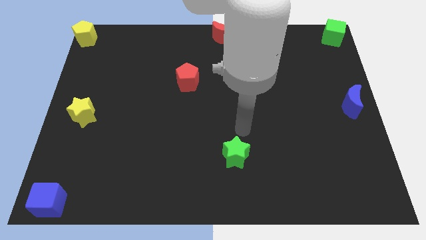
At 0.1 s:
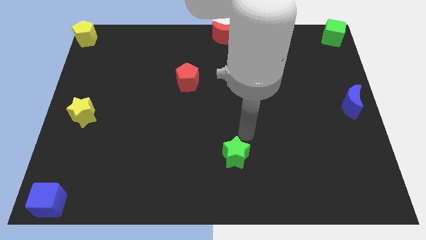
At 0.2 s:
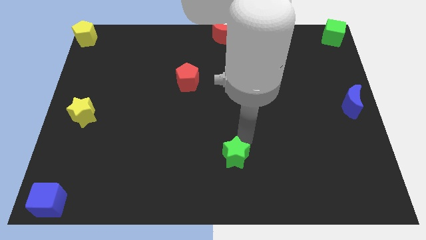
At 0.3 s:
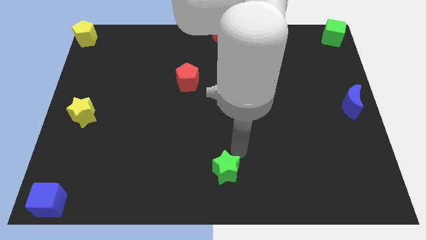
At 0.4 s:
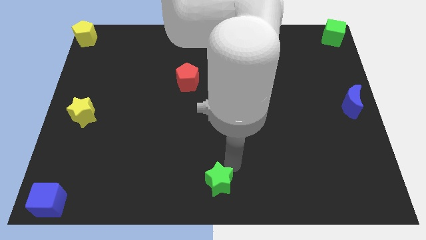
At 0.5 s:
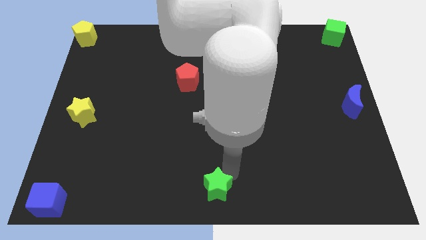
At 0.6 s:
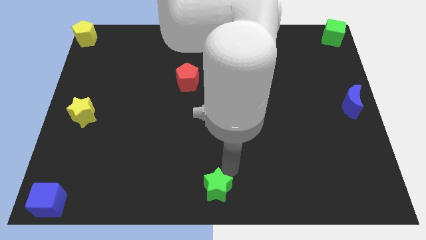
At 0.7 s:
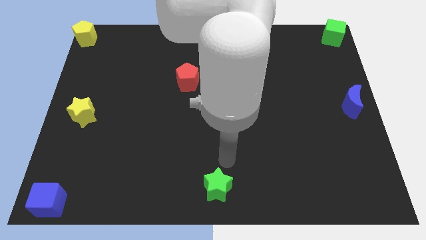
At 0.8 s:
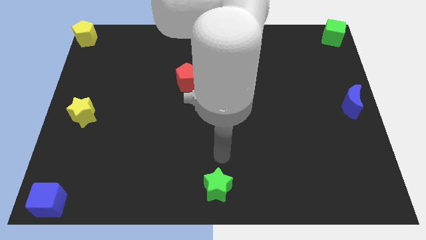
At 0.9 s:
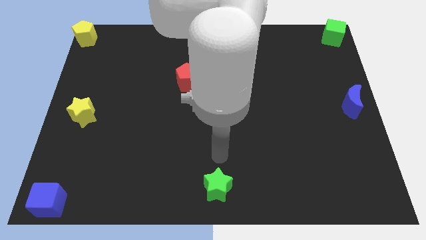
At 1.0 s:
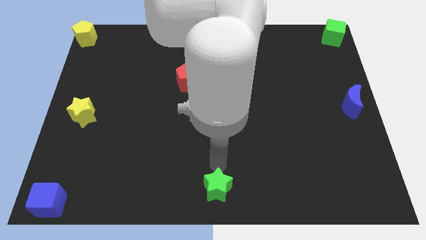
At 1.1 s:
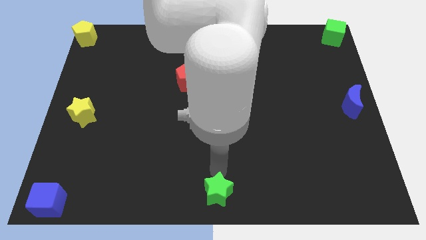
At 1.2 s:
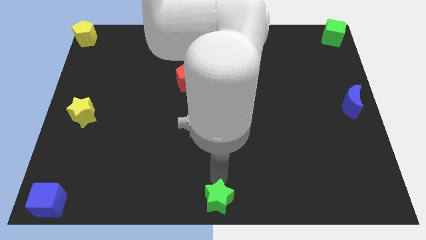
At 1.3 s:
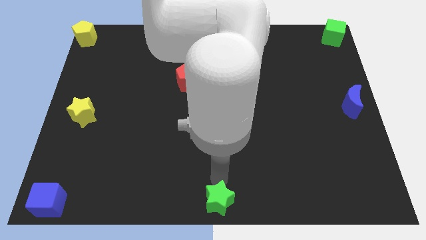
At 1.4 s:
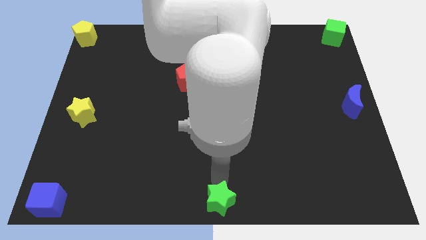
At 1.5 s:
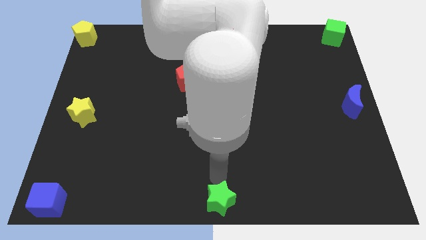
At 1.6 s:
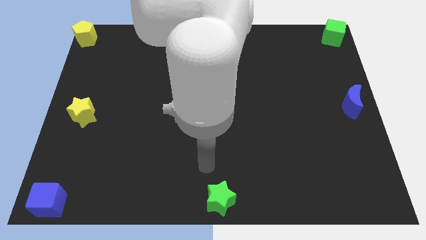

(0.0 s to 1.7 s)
move the green star to the bottom center of the board

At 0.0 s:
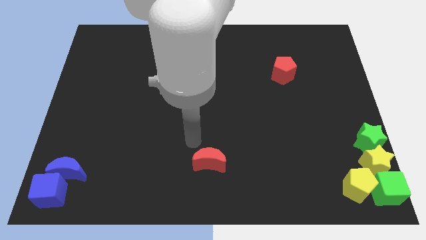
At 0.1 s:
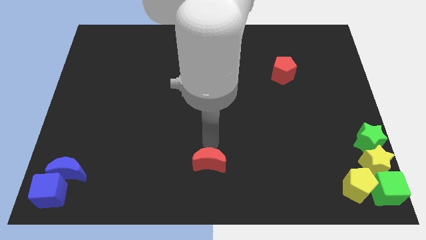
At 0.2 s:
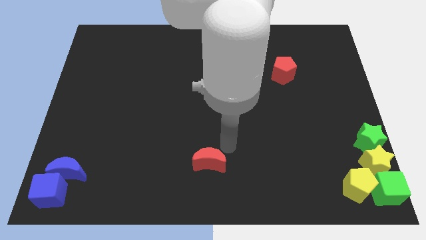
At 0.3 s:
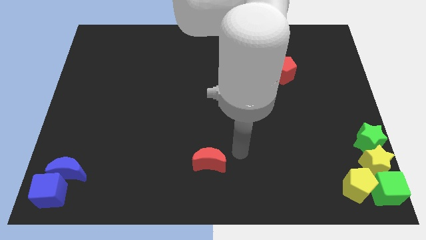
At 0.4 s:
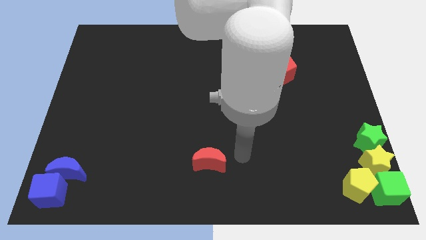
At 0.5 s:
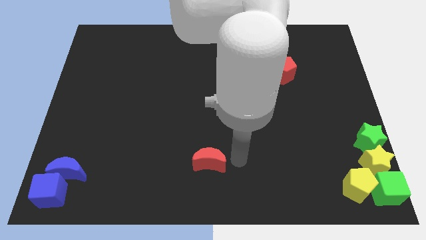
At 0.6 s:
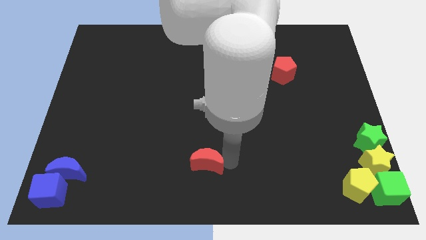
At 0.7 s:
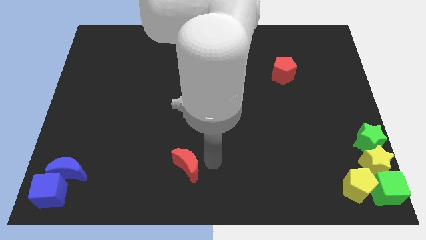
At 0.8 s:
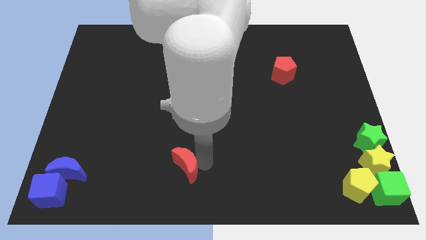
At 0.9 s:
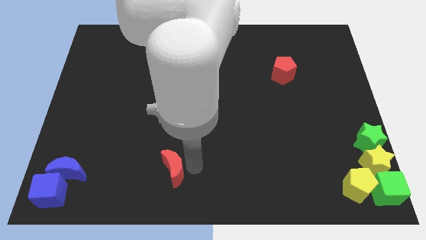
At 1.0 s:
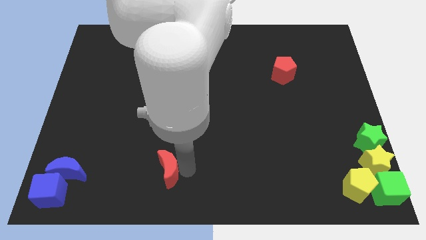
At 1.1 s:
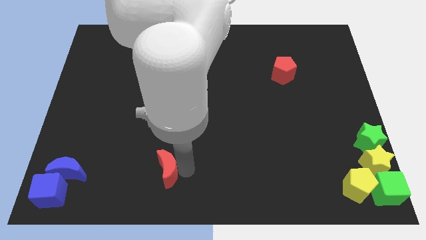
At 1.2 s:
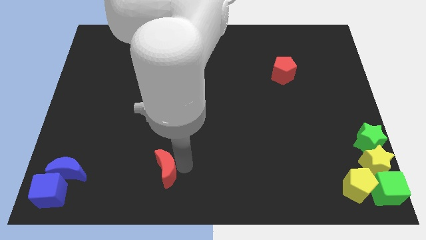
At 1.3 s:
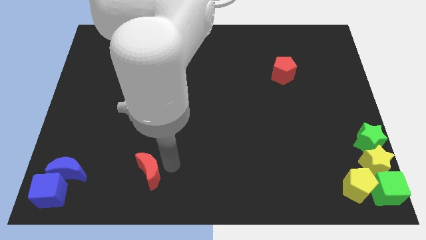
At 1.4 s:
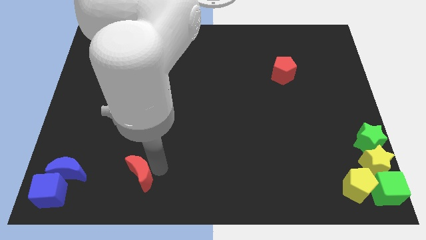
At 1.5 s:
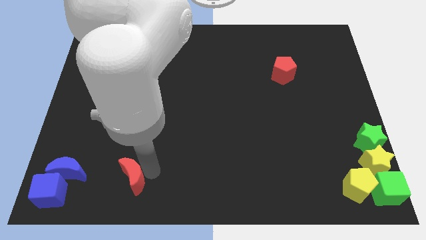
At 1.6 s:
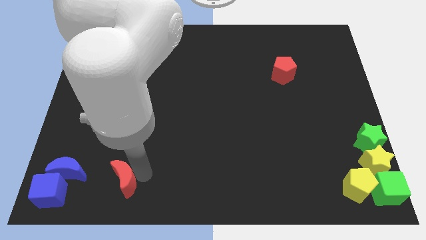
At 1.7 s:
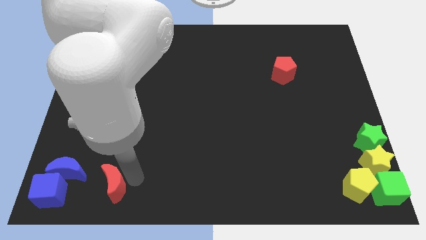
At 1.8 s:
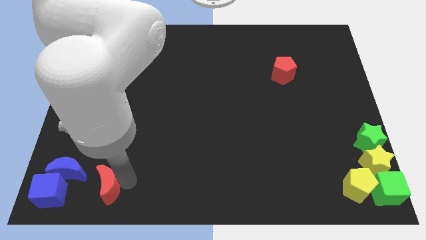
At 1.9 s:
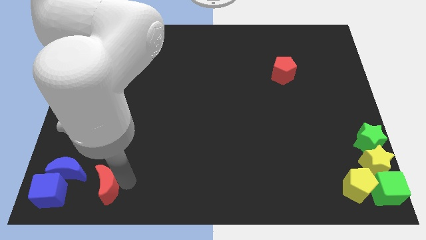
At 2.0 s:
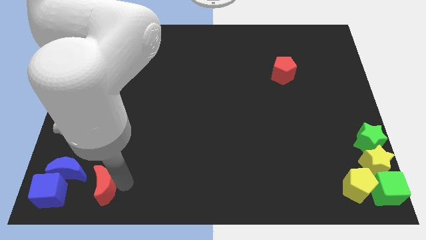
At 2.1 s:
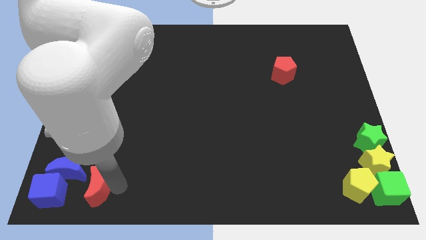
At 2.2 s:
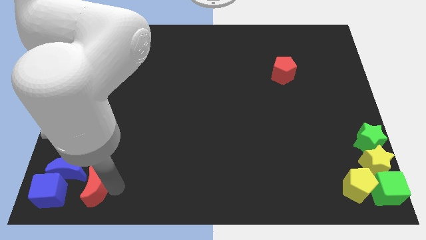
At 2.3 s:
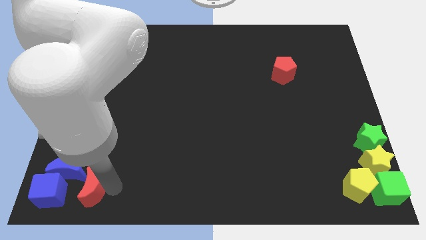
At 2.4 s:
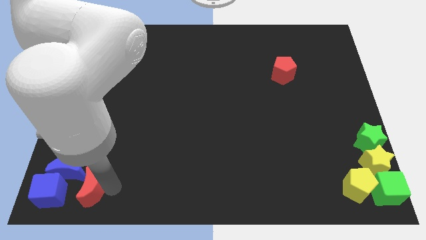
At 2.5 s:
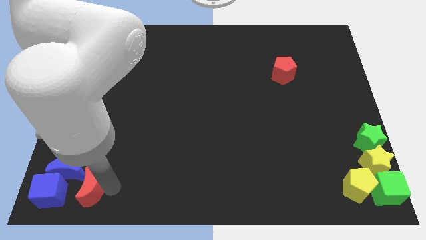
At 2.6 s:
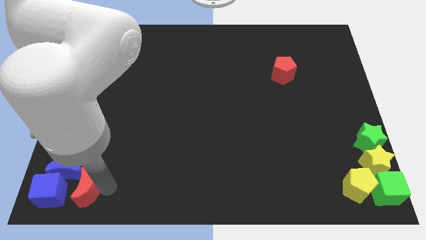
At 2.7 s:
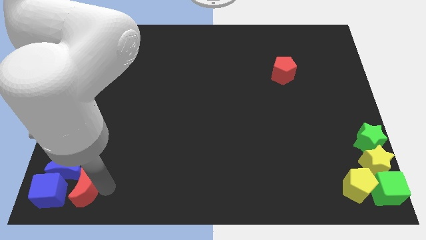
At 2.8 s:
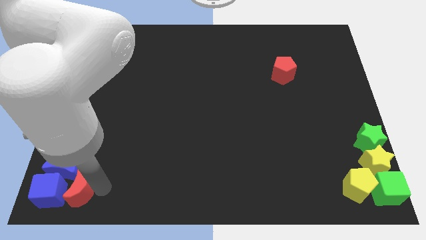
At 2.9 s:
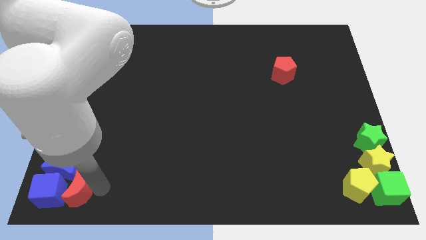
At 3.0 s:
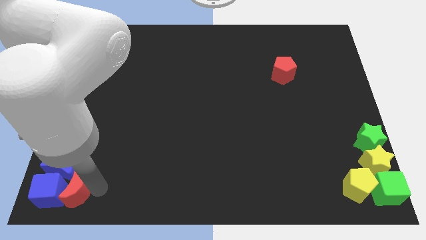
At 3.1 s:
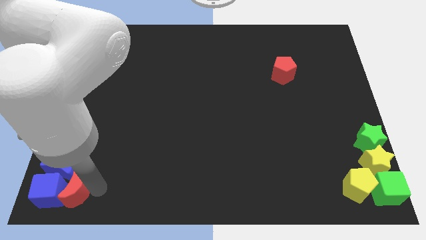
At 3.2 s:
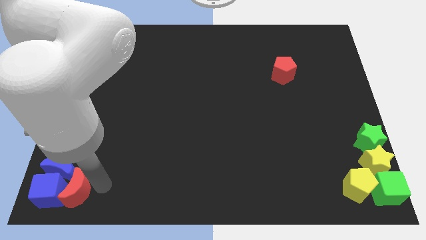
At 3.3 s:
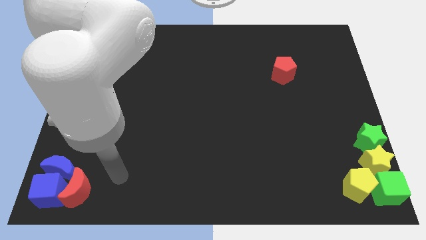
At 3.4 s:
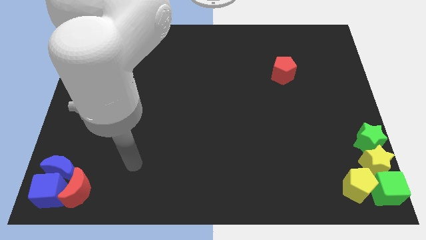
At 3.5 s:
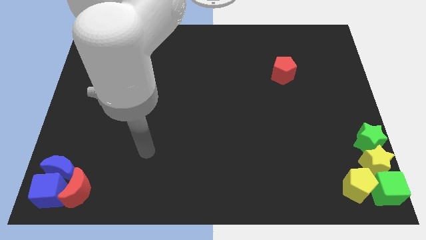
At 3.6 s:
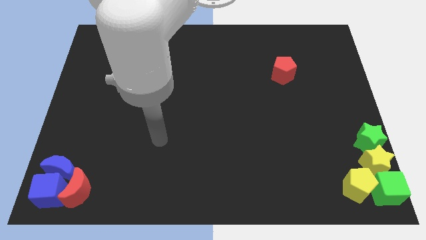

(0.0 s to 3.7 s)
push the red crescent into the blue blocks

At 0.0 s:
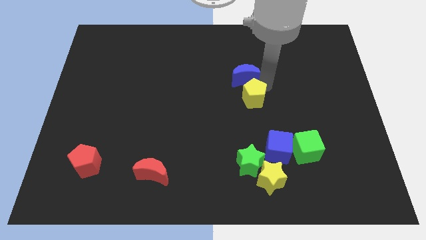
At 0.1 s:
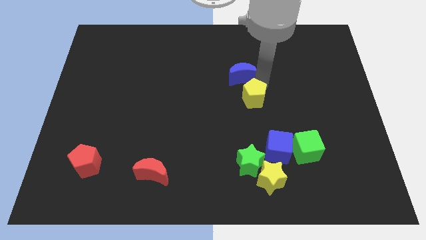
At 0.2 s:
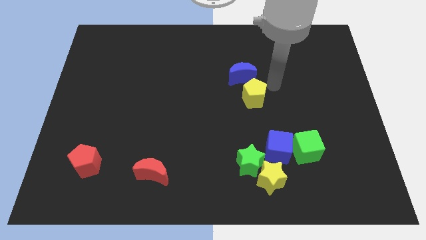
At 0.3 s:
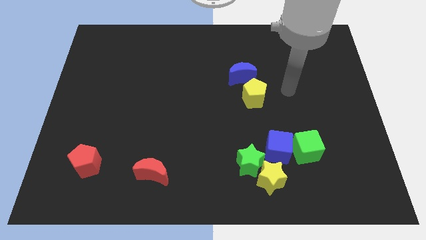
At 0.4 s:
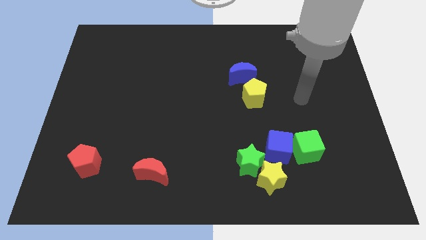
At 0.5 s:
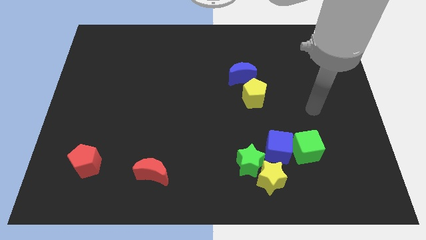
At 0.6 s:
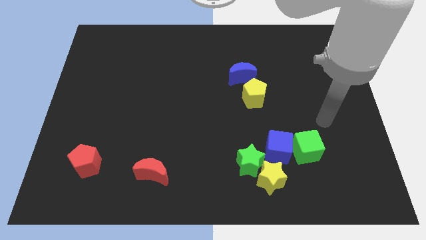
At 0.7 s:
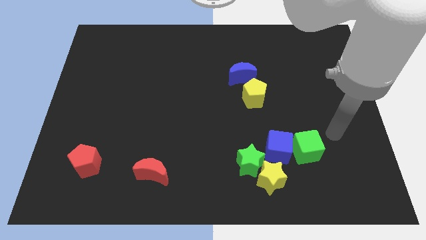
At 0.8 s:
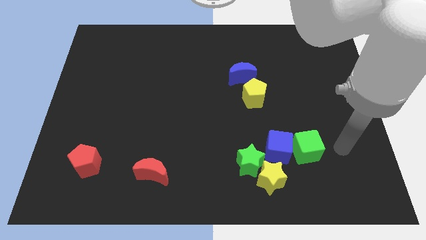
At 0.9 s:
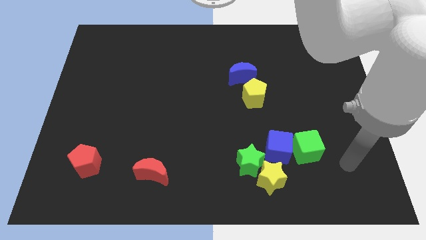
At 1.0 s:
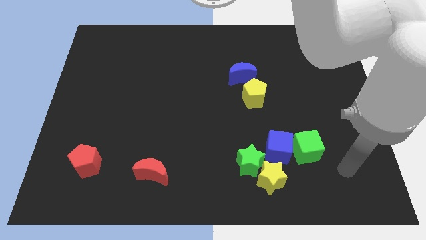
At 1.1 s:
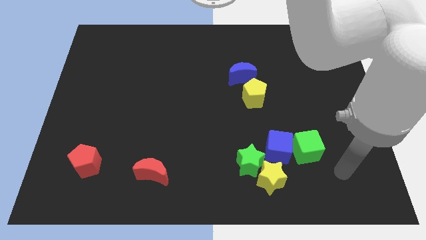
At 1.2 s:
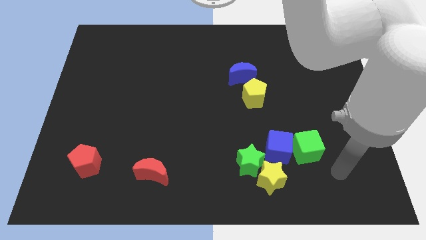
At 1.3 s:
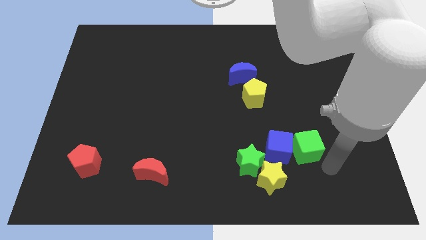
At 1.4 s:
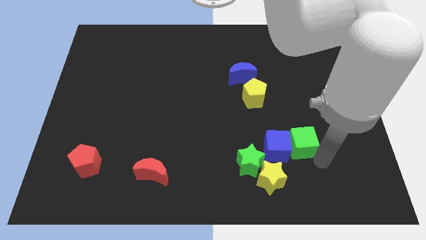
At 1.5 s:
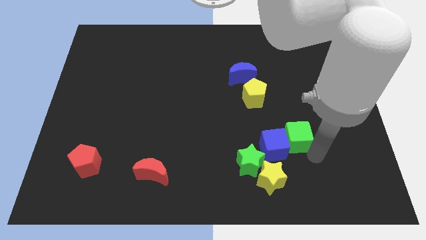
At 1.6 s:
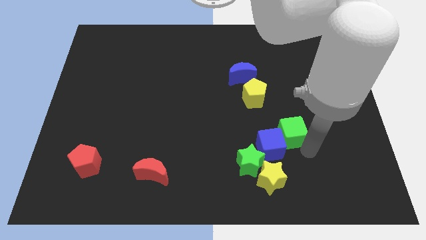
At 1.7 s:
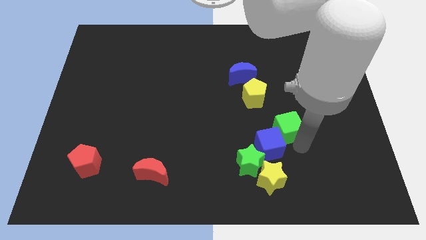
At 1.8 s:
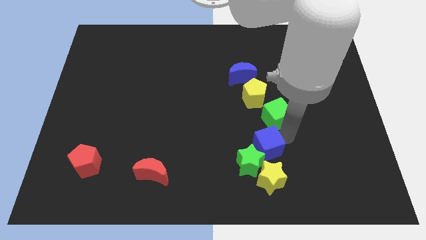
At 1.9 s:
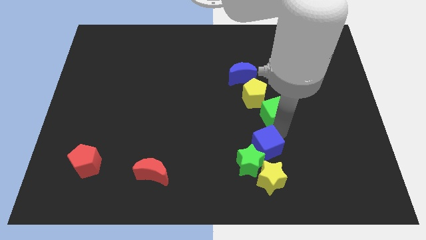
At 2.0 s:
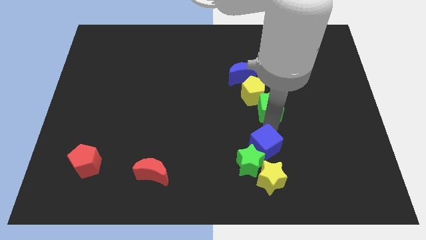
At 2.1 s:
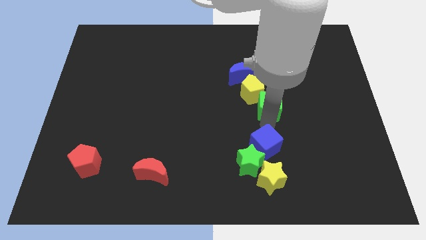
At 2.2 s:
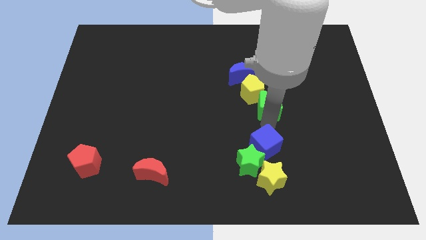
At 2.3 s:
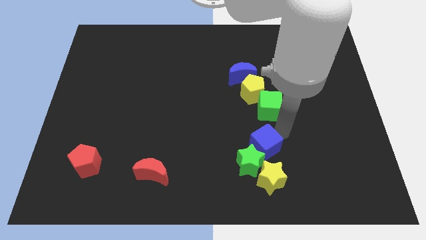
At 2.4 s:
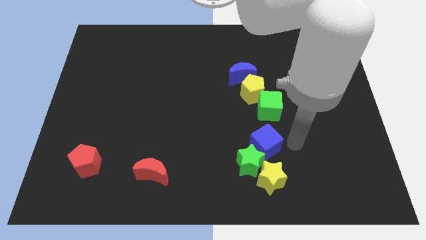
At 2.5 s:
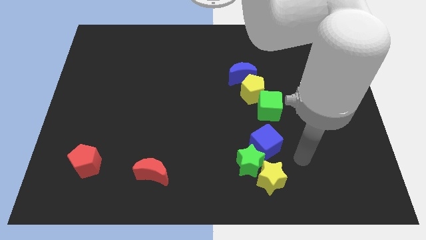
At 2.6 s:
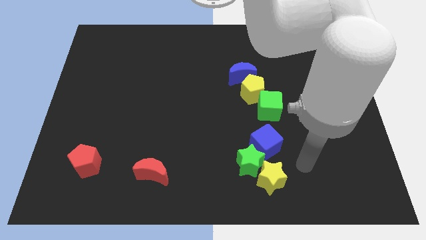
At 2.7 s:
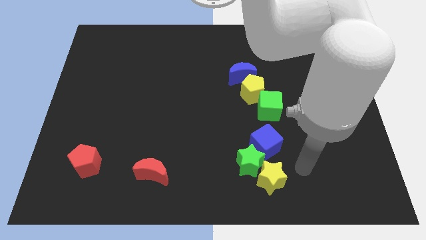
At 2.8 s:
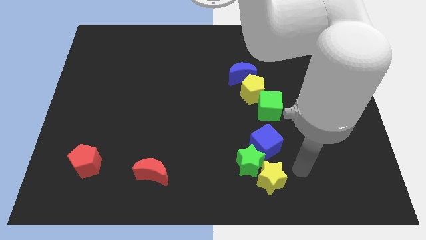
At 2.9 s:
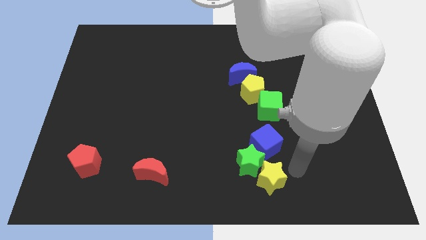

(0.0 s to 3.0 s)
make a diagonal line with the green cube yellow pentagon and blue crescent

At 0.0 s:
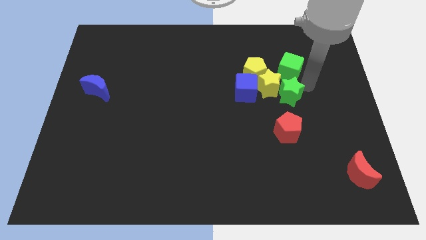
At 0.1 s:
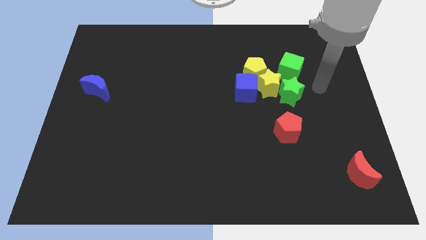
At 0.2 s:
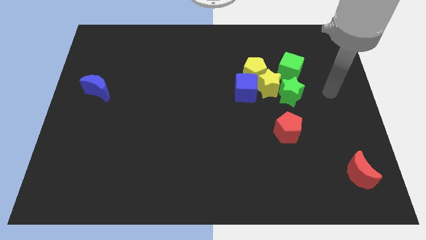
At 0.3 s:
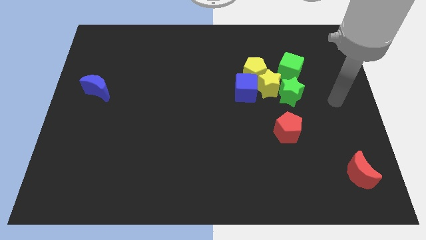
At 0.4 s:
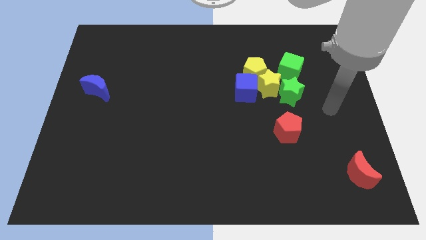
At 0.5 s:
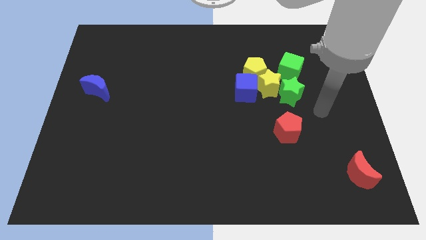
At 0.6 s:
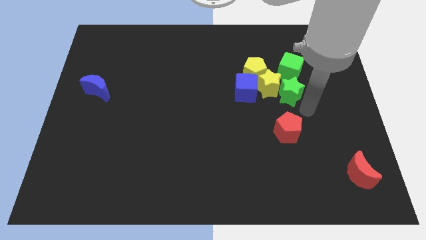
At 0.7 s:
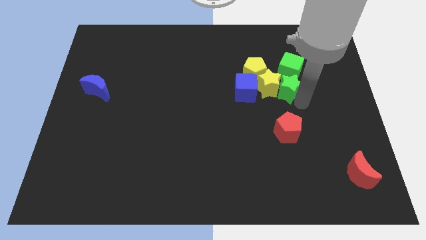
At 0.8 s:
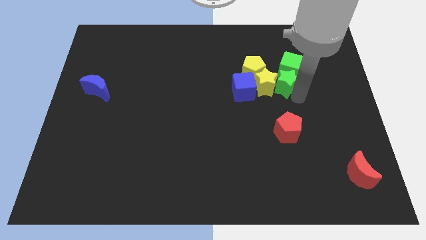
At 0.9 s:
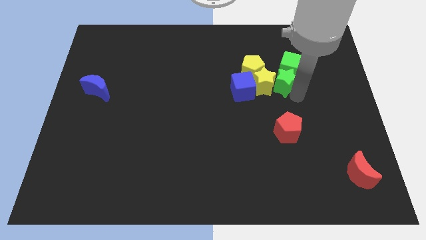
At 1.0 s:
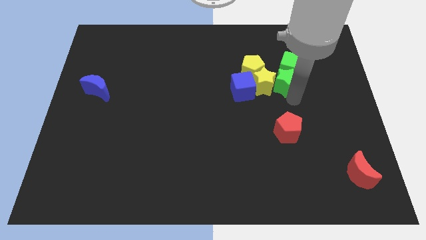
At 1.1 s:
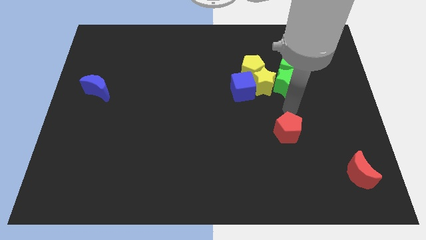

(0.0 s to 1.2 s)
place green star to the bottom of green cube
